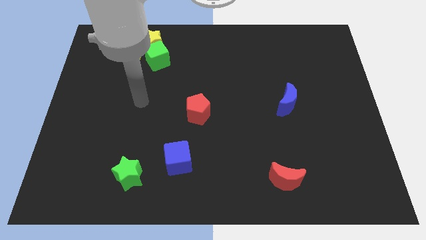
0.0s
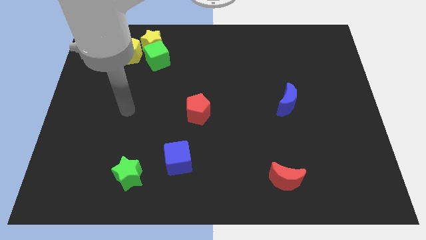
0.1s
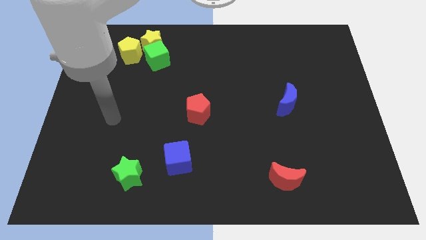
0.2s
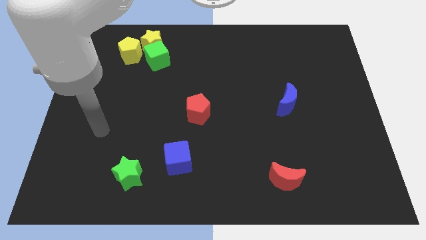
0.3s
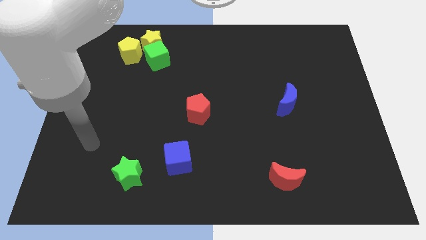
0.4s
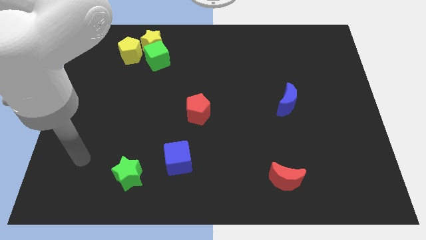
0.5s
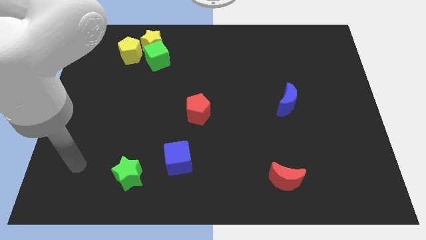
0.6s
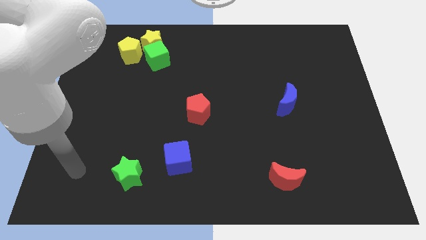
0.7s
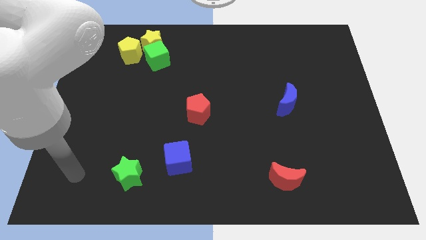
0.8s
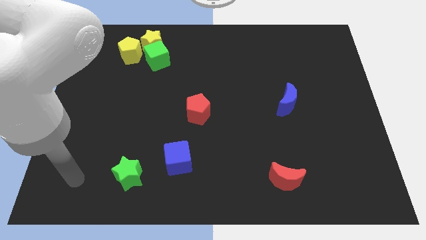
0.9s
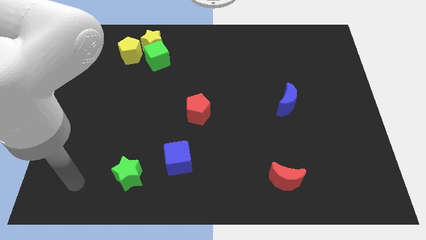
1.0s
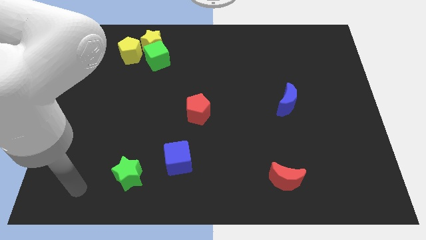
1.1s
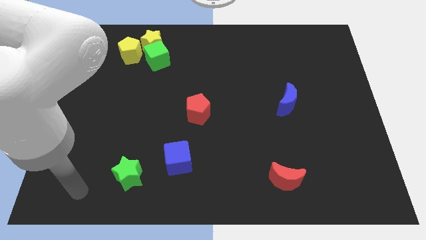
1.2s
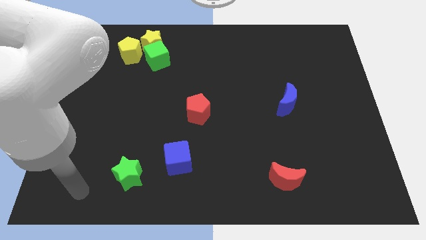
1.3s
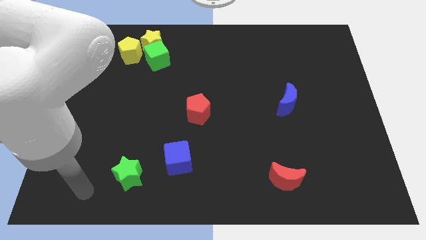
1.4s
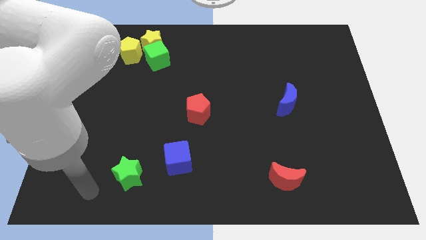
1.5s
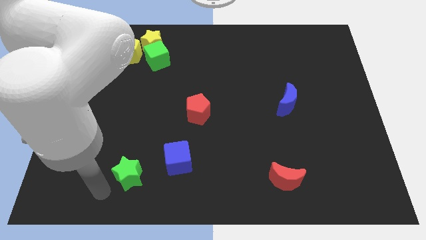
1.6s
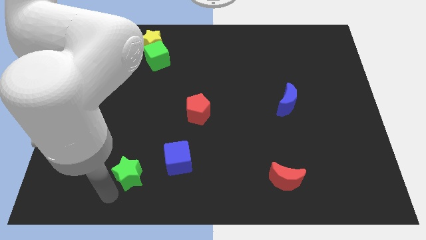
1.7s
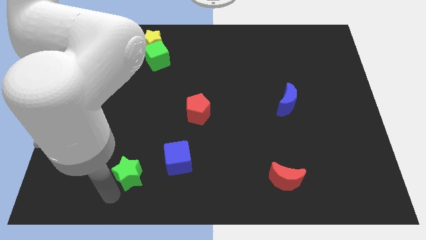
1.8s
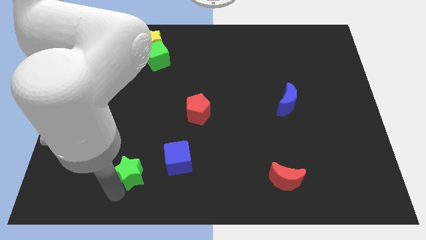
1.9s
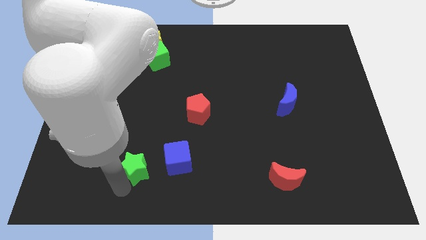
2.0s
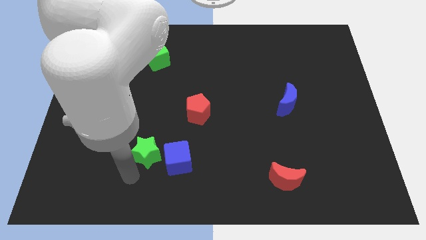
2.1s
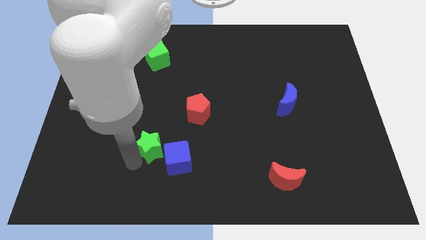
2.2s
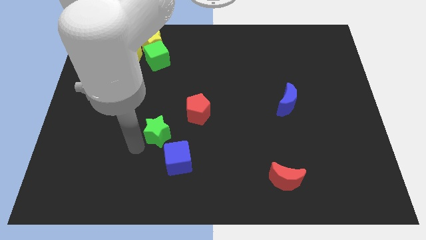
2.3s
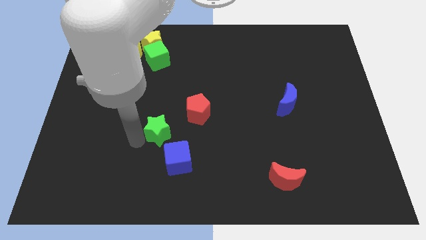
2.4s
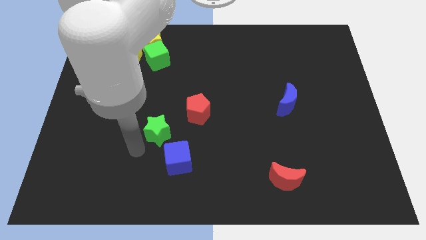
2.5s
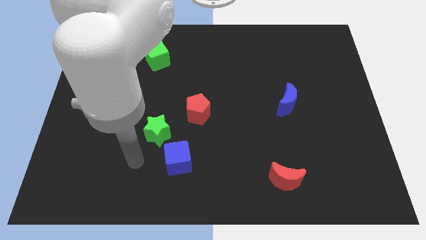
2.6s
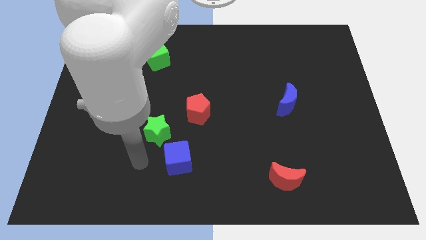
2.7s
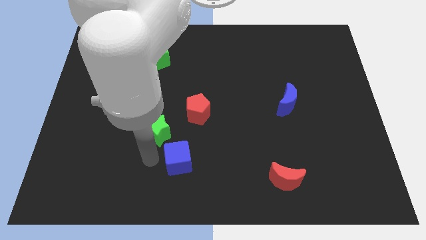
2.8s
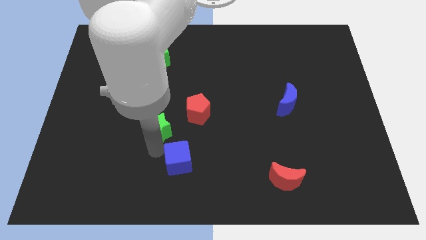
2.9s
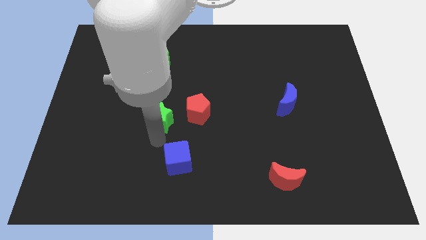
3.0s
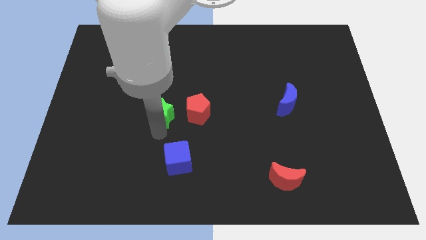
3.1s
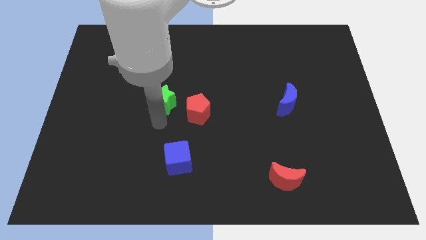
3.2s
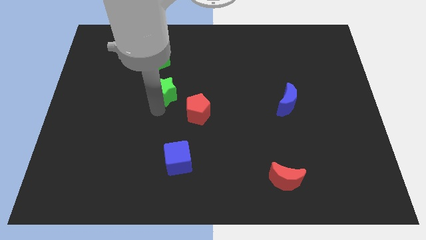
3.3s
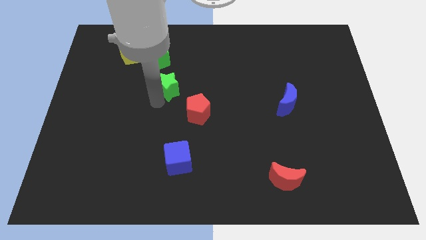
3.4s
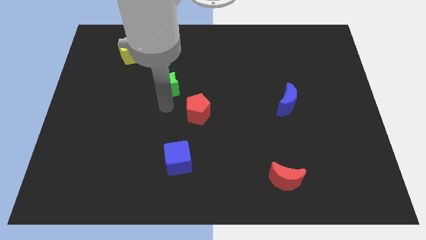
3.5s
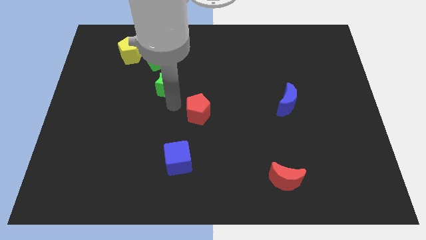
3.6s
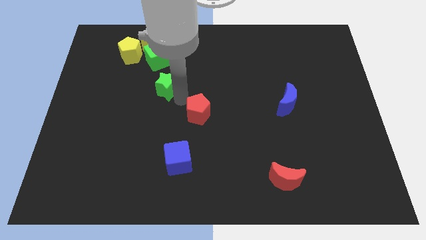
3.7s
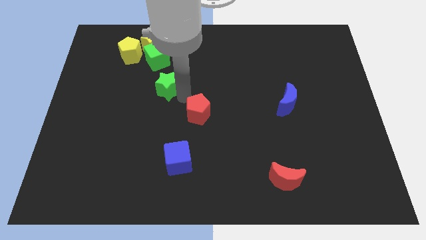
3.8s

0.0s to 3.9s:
place the green star in between the green cube and the red pentagon

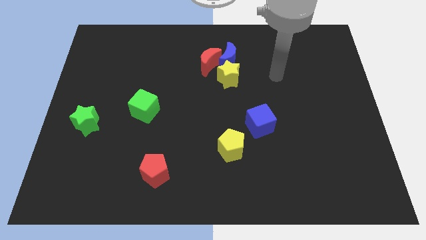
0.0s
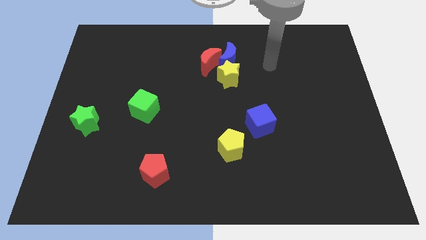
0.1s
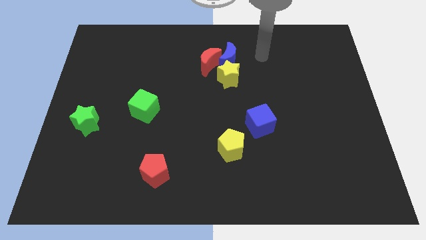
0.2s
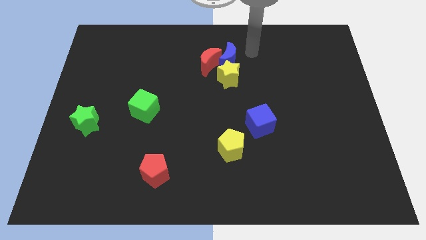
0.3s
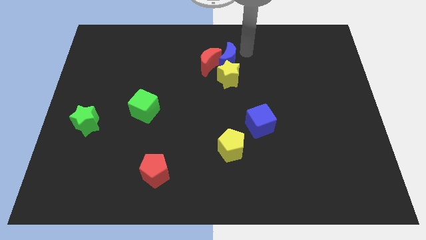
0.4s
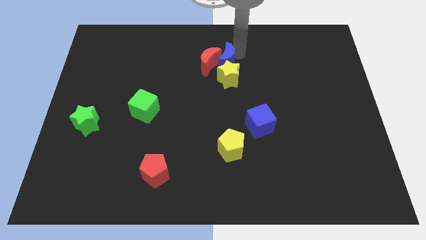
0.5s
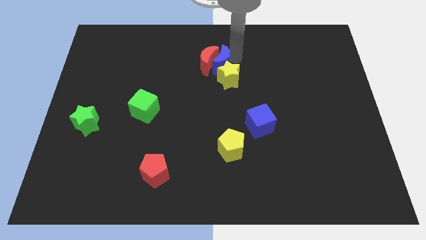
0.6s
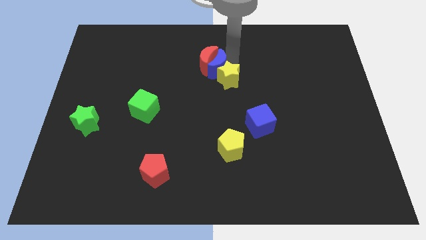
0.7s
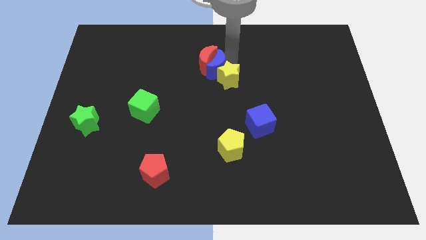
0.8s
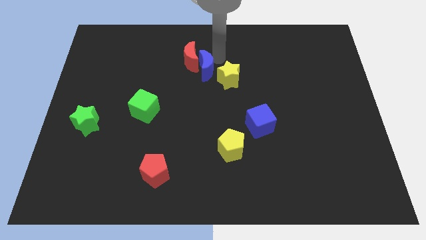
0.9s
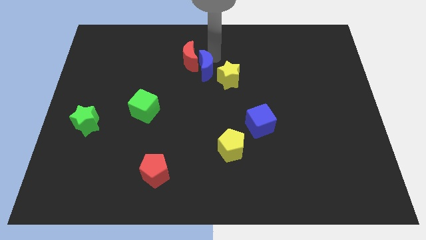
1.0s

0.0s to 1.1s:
push the blue moon into the red moon

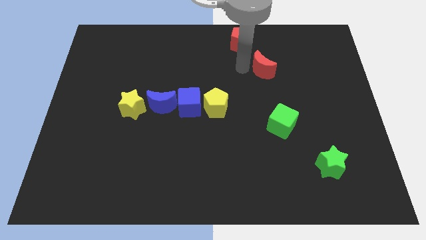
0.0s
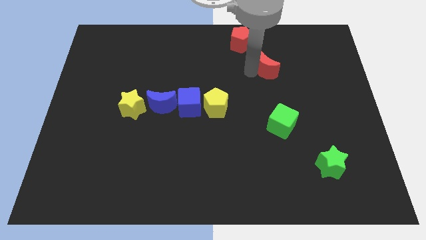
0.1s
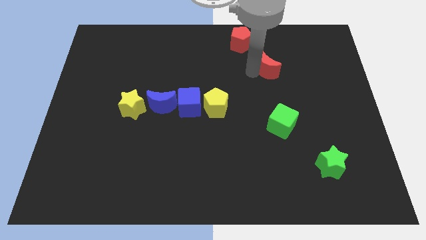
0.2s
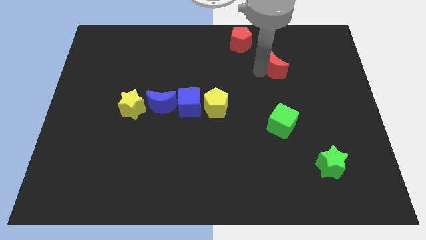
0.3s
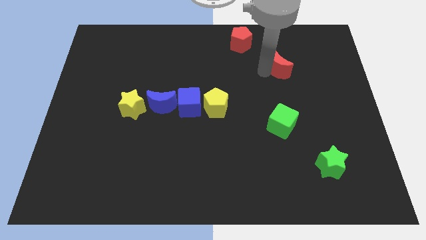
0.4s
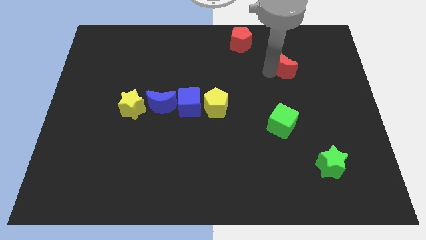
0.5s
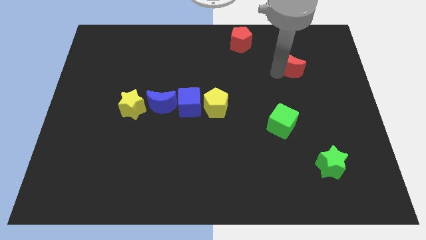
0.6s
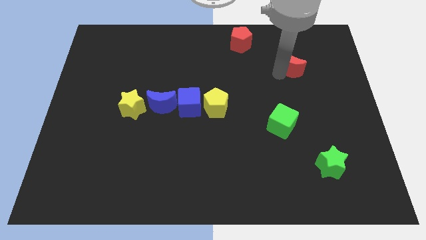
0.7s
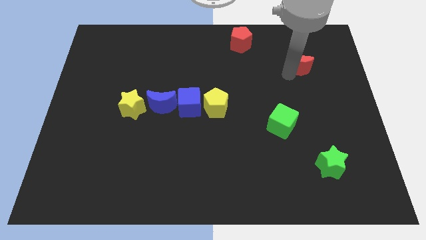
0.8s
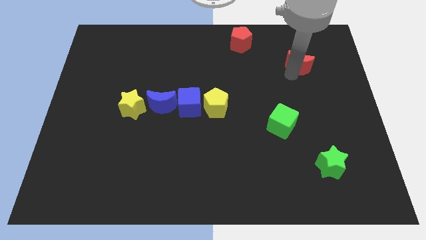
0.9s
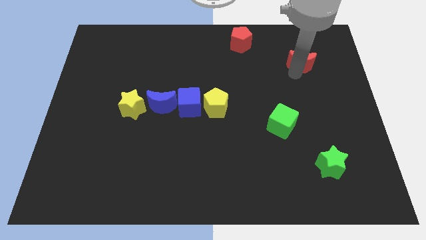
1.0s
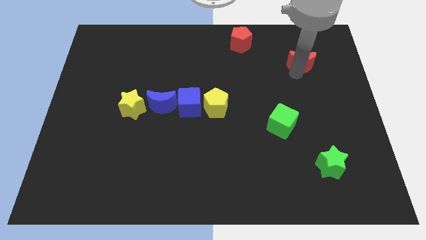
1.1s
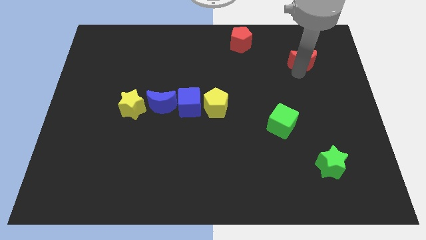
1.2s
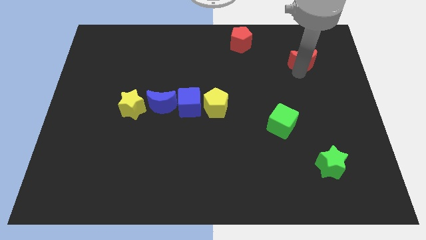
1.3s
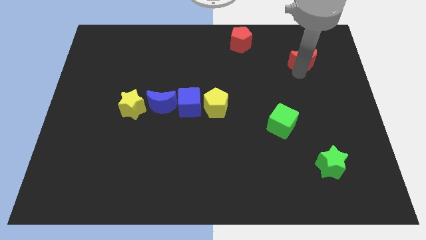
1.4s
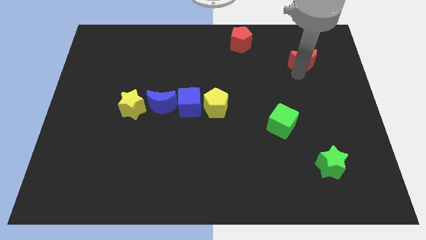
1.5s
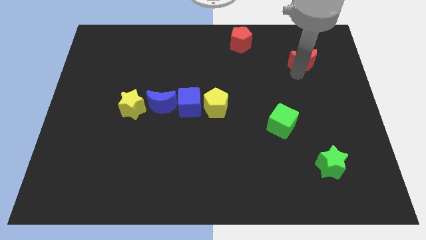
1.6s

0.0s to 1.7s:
move the red crescent slightly to the right

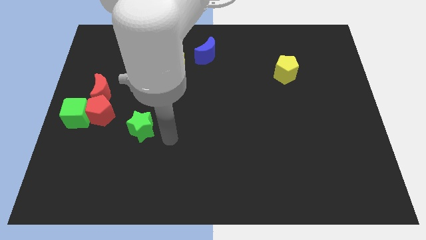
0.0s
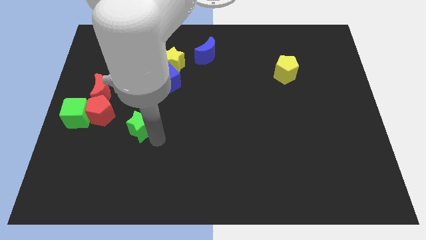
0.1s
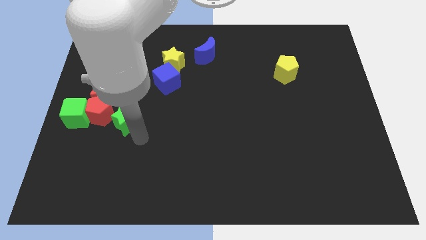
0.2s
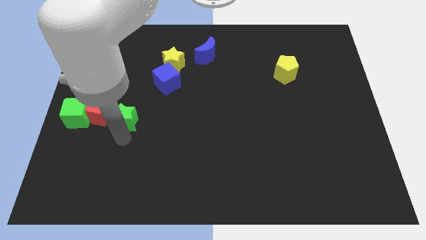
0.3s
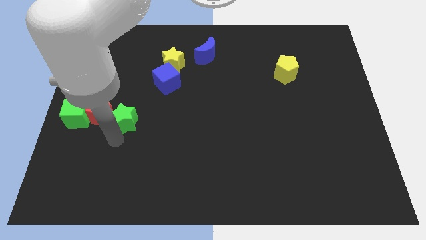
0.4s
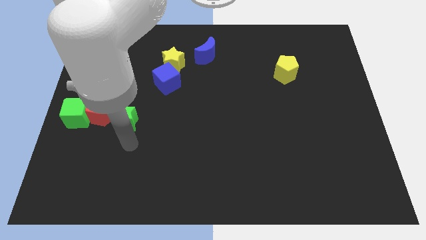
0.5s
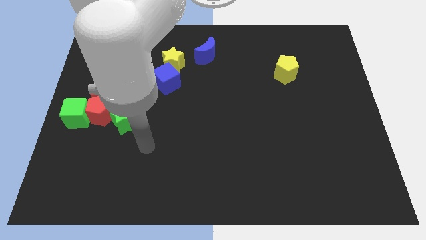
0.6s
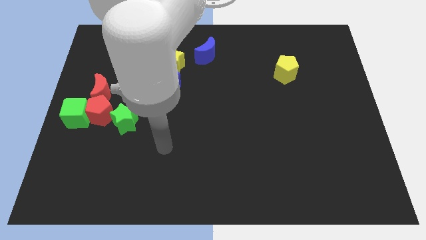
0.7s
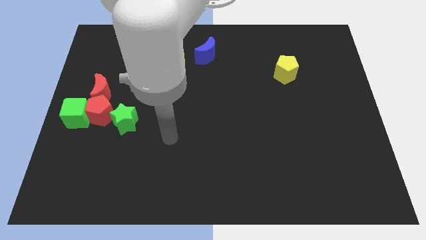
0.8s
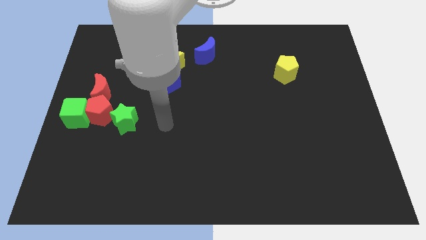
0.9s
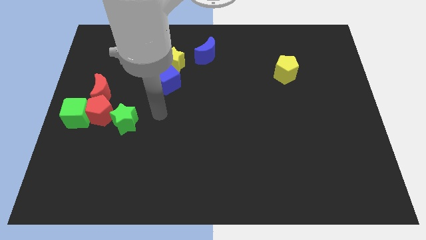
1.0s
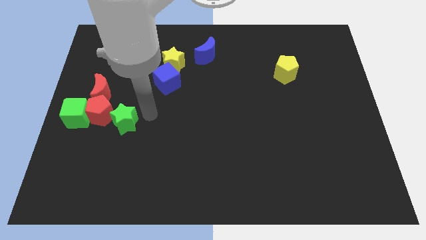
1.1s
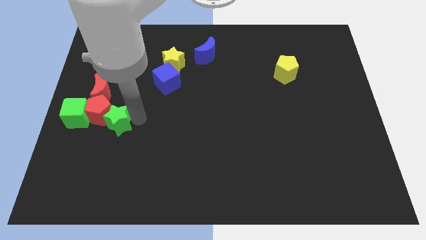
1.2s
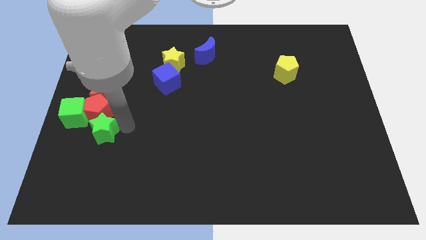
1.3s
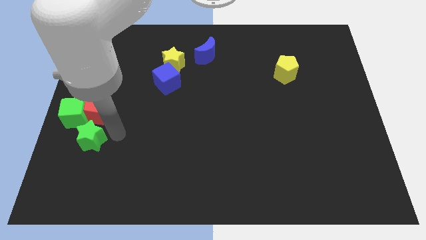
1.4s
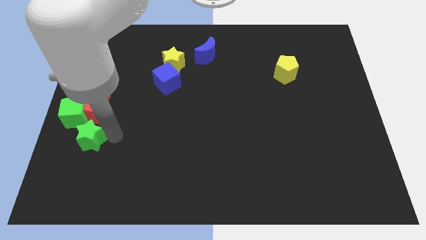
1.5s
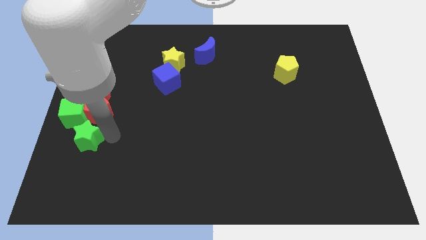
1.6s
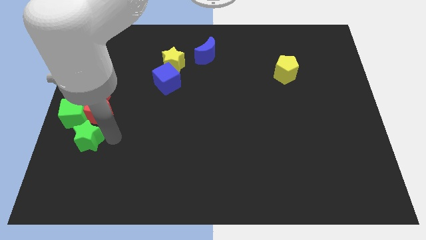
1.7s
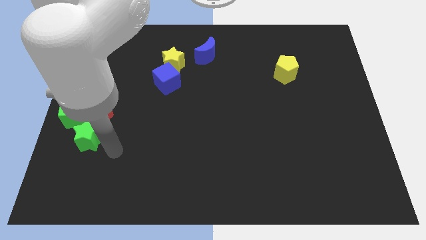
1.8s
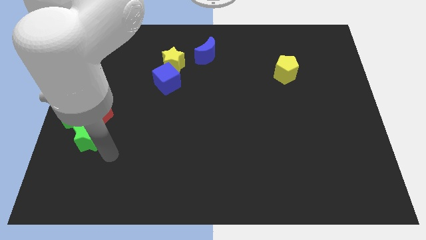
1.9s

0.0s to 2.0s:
place green star to the bottom of red pentagon

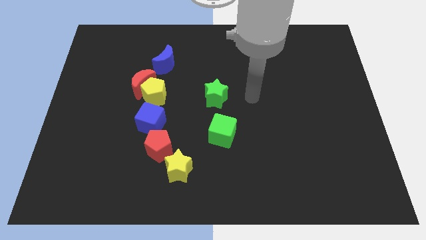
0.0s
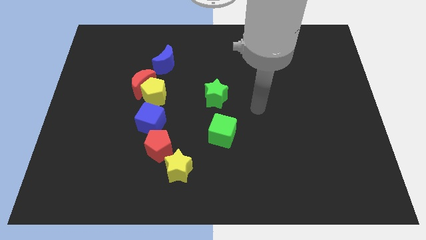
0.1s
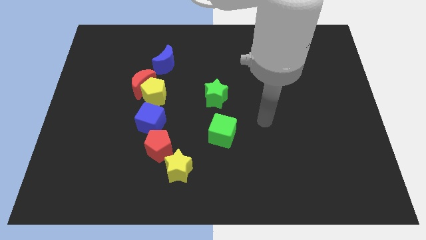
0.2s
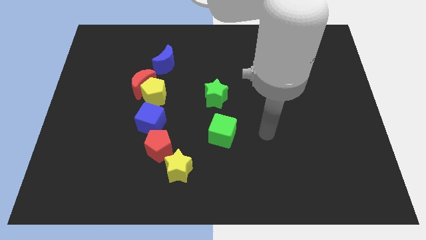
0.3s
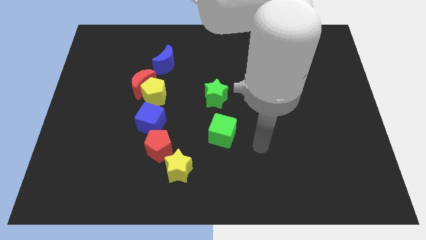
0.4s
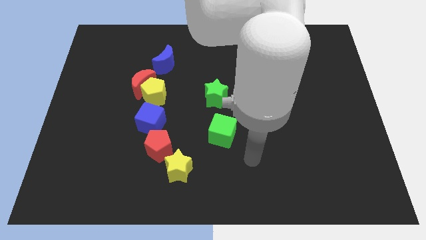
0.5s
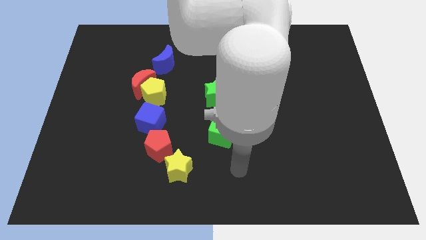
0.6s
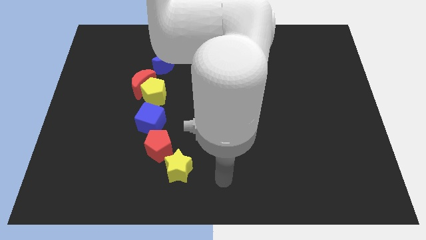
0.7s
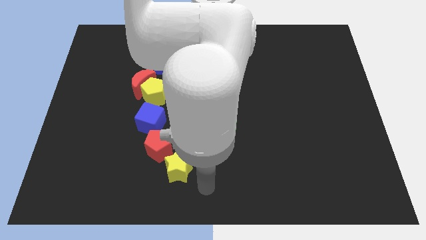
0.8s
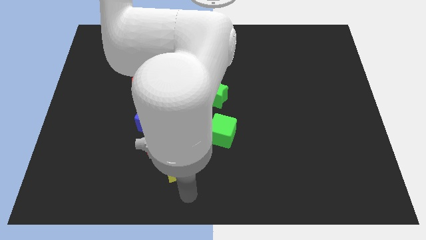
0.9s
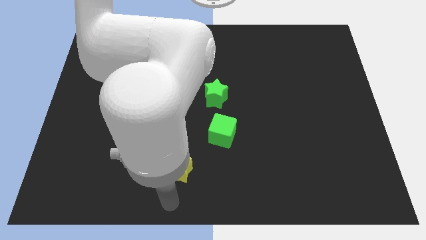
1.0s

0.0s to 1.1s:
point your arm below the yellow star
